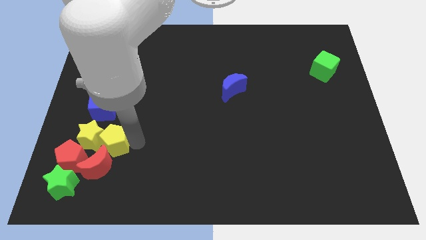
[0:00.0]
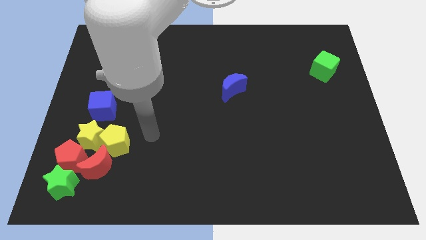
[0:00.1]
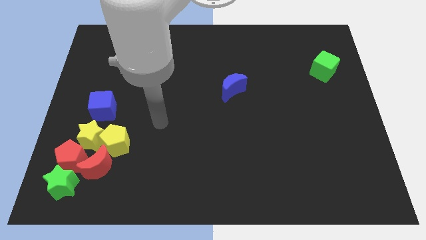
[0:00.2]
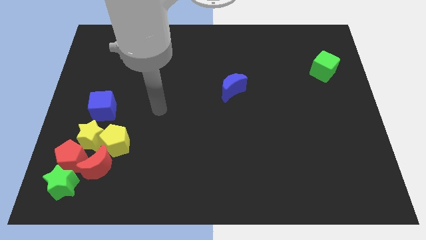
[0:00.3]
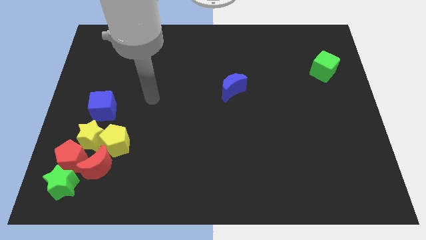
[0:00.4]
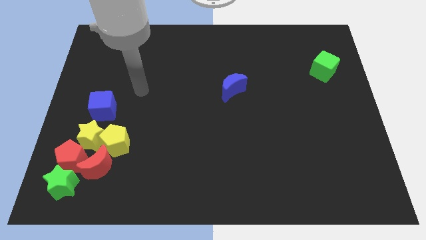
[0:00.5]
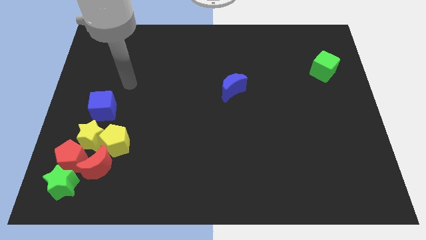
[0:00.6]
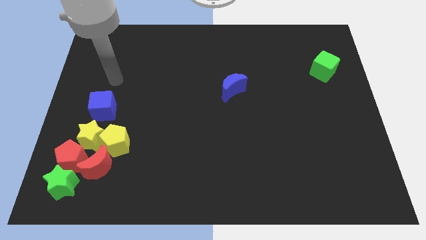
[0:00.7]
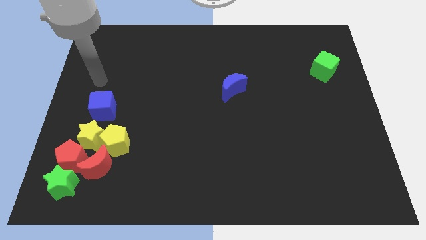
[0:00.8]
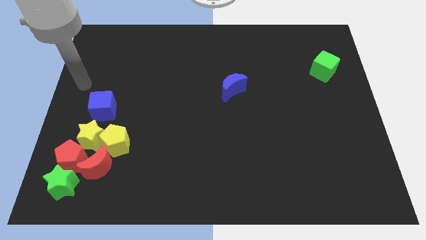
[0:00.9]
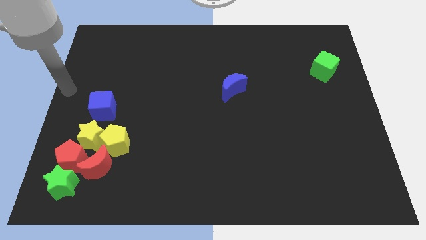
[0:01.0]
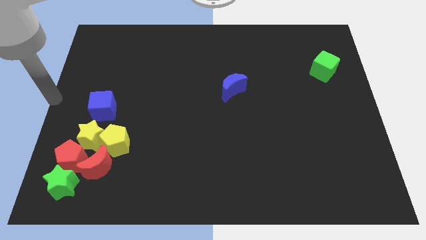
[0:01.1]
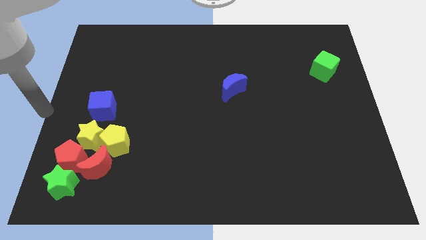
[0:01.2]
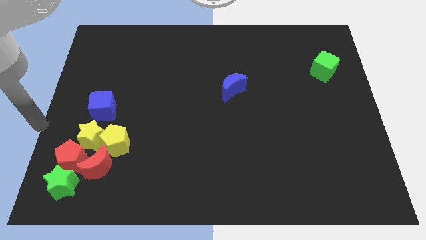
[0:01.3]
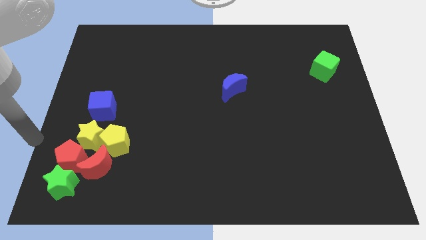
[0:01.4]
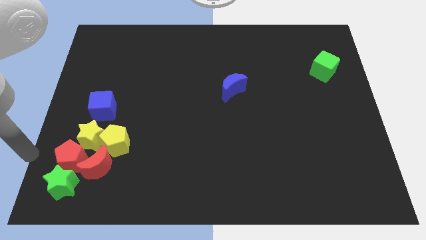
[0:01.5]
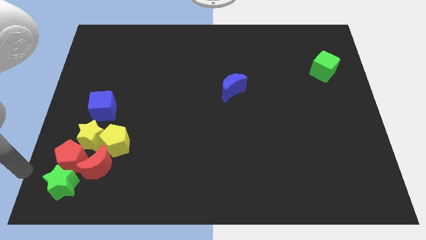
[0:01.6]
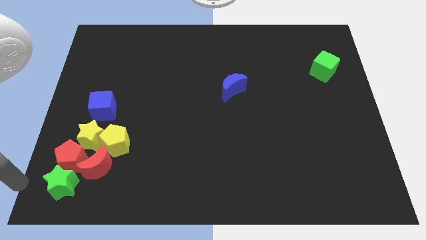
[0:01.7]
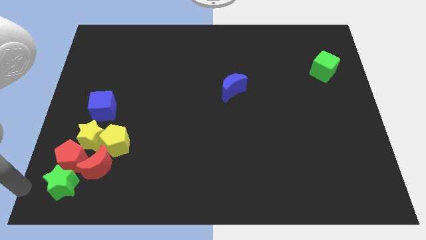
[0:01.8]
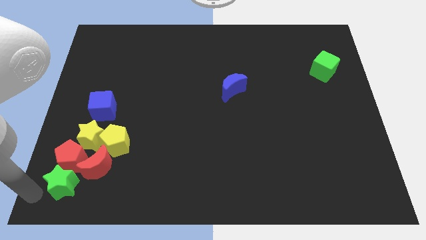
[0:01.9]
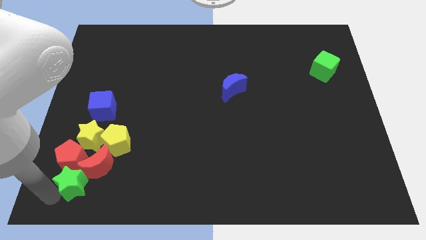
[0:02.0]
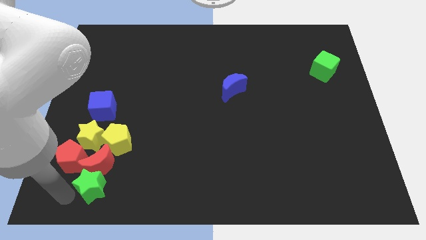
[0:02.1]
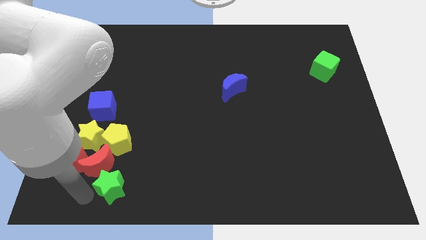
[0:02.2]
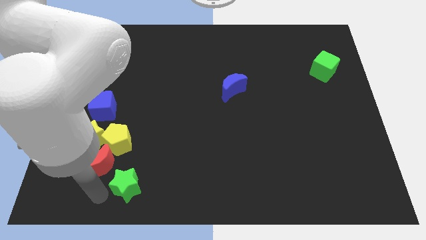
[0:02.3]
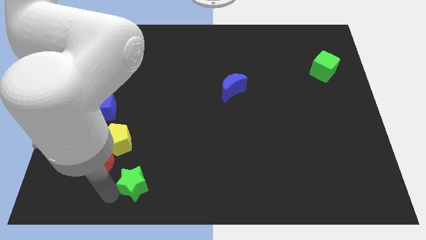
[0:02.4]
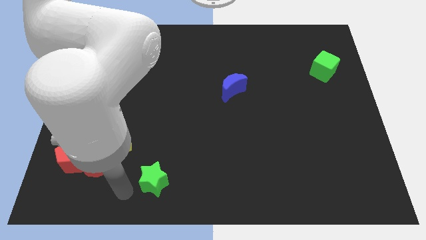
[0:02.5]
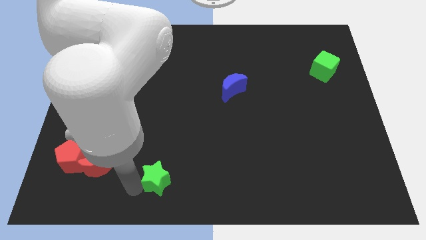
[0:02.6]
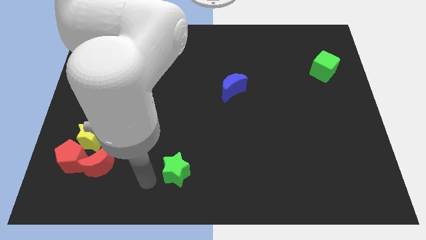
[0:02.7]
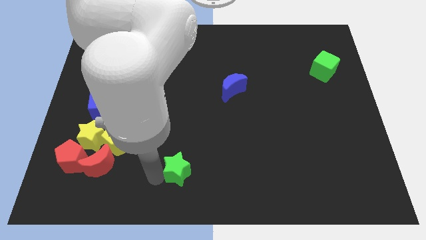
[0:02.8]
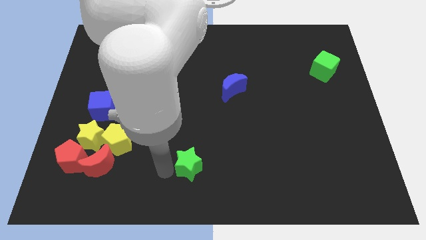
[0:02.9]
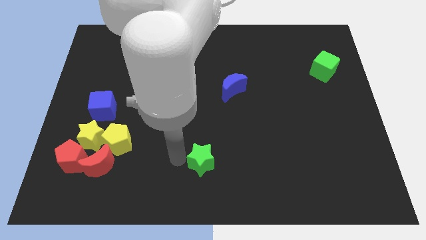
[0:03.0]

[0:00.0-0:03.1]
push the green star away from the red pentagon

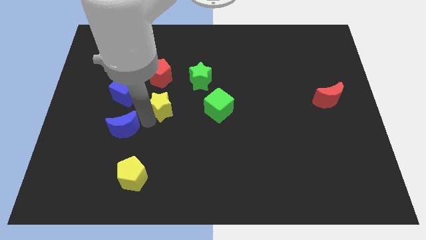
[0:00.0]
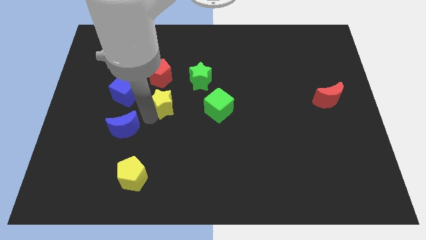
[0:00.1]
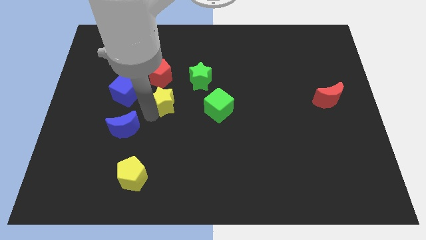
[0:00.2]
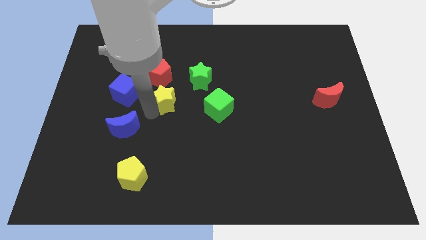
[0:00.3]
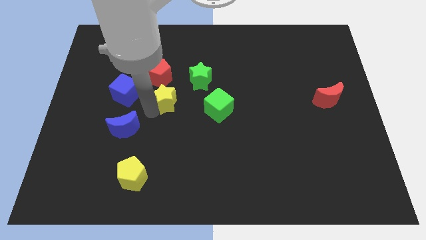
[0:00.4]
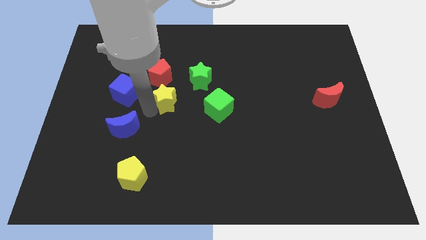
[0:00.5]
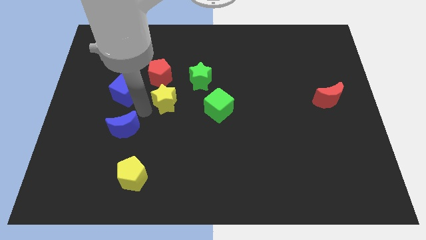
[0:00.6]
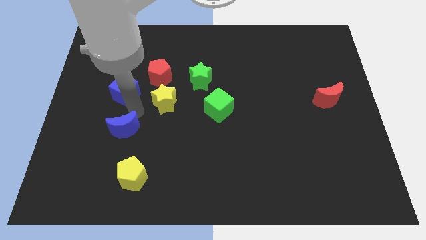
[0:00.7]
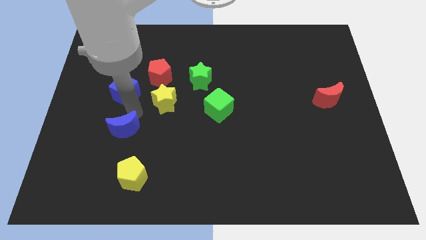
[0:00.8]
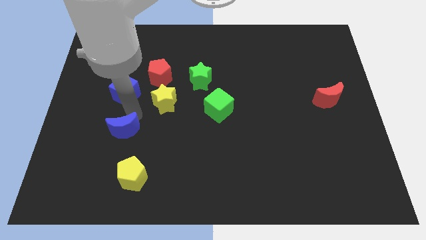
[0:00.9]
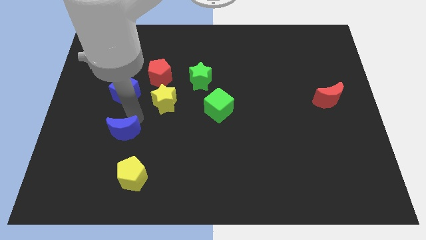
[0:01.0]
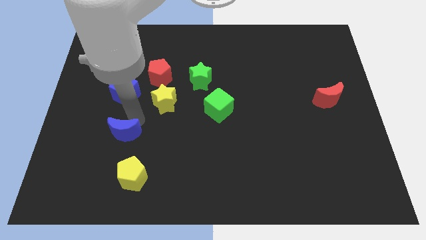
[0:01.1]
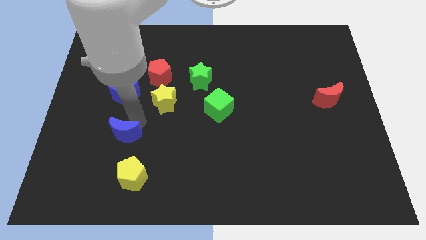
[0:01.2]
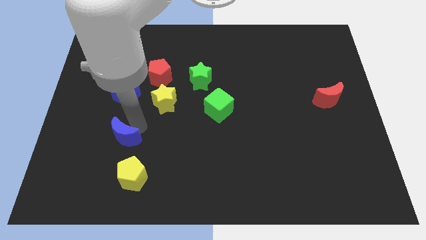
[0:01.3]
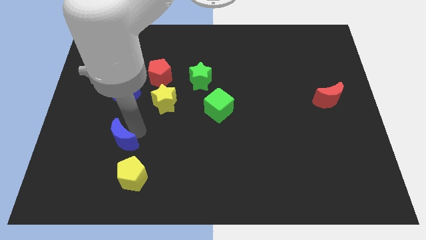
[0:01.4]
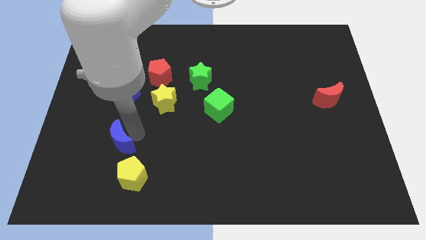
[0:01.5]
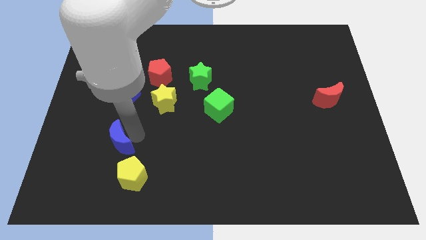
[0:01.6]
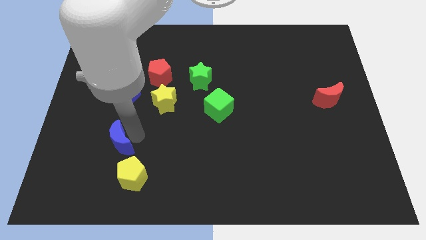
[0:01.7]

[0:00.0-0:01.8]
separate the yellow star and blue moon

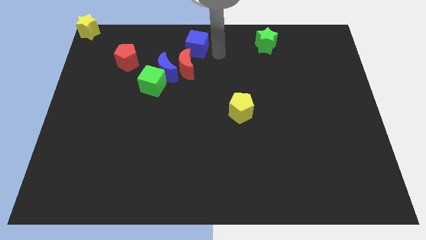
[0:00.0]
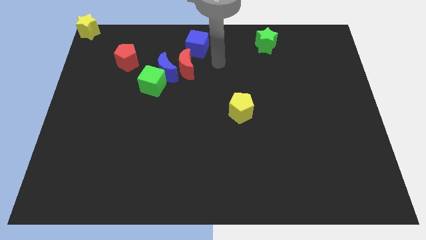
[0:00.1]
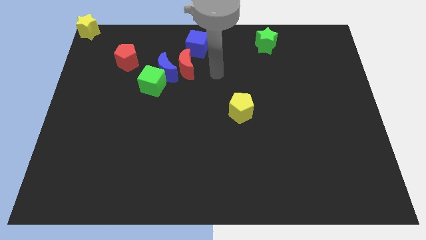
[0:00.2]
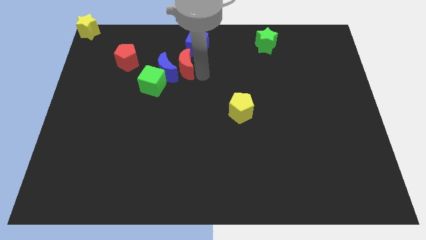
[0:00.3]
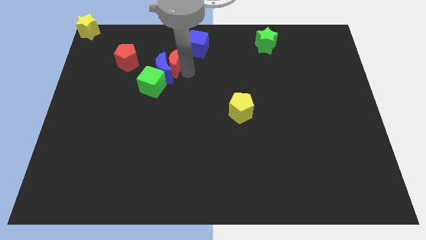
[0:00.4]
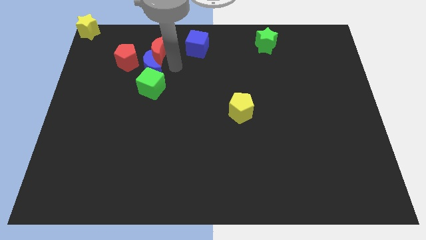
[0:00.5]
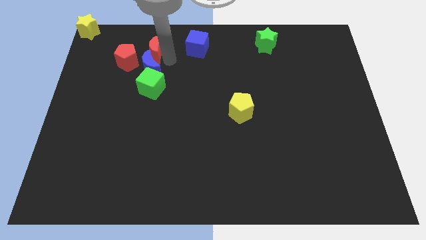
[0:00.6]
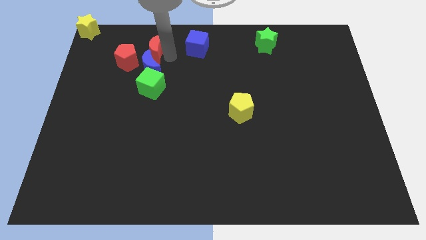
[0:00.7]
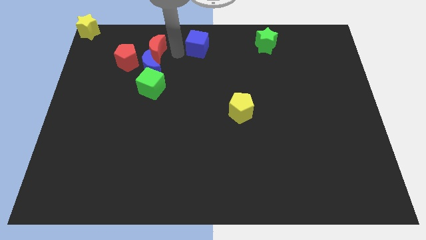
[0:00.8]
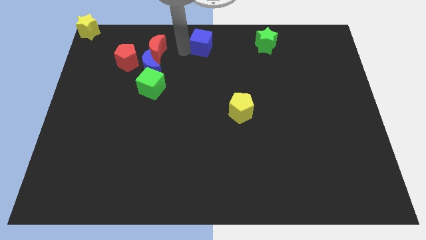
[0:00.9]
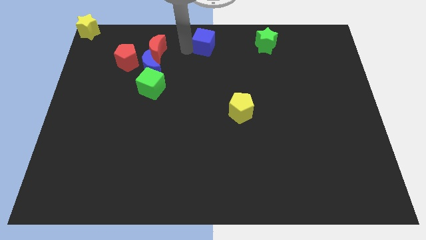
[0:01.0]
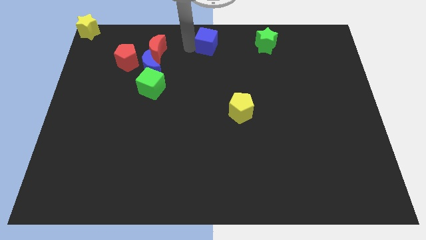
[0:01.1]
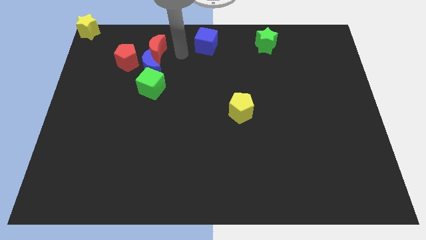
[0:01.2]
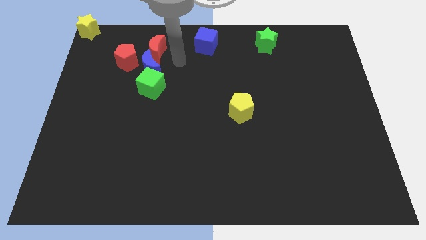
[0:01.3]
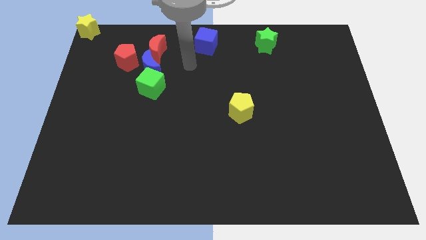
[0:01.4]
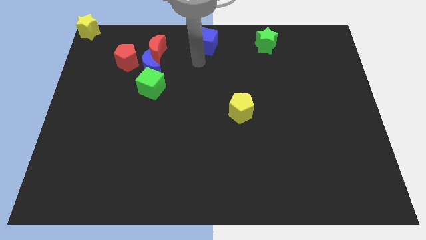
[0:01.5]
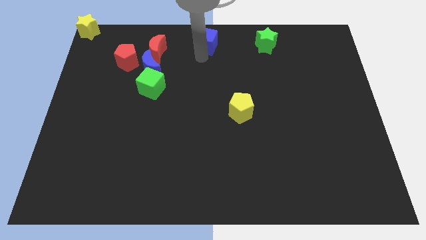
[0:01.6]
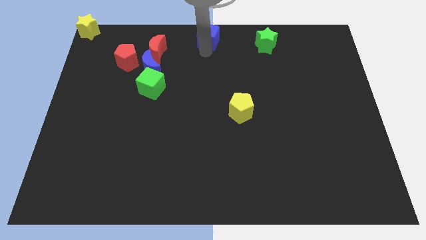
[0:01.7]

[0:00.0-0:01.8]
move the red moon into the blue moon

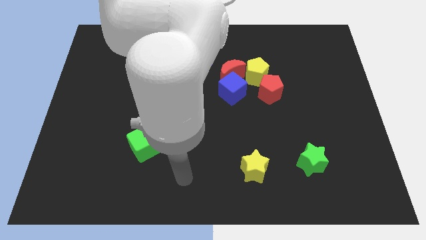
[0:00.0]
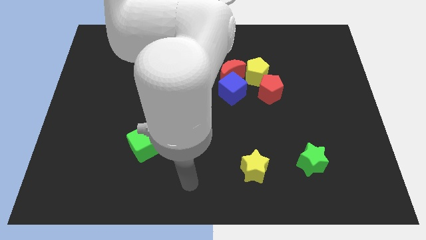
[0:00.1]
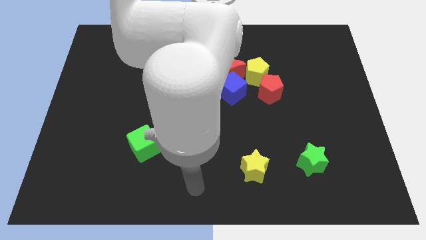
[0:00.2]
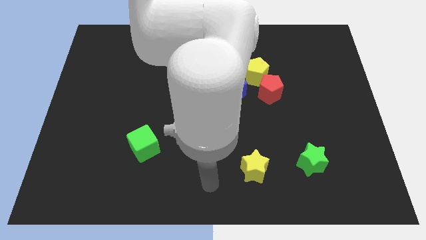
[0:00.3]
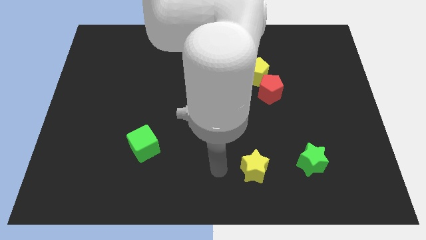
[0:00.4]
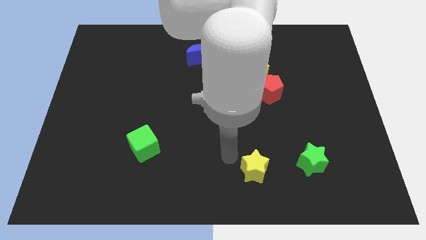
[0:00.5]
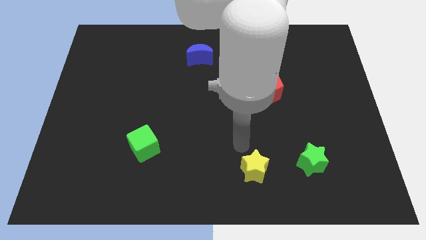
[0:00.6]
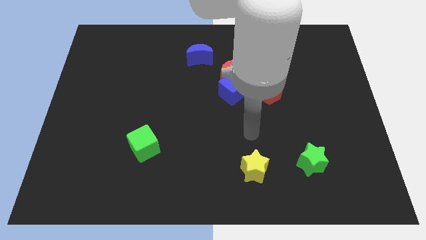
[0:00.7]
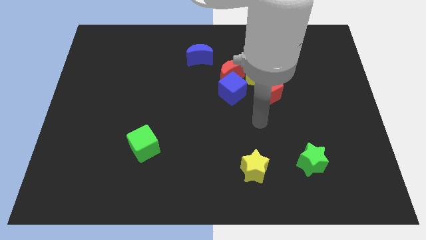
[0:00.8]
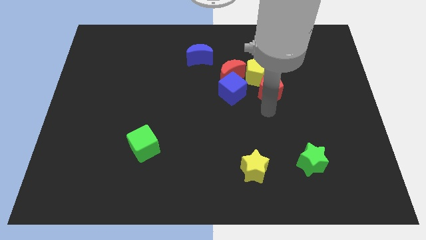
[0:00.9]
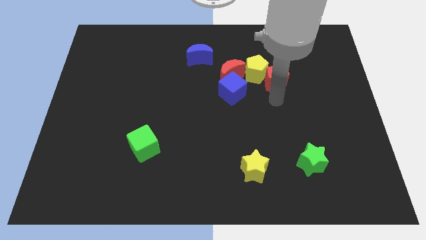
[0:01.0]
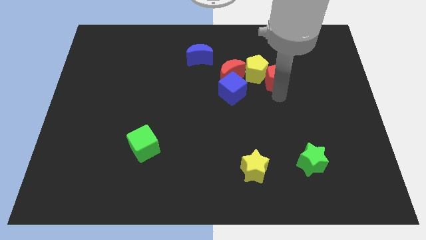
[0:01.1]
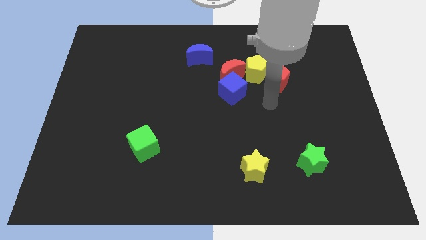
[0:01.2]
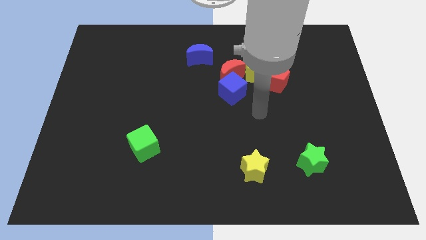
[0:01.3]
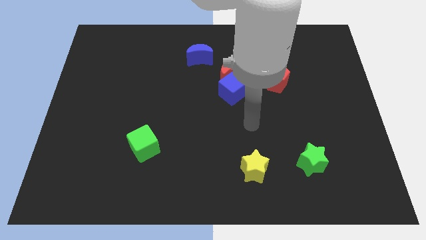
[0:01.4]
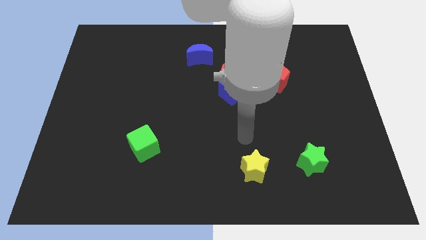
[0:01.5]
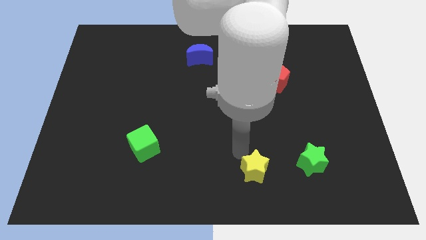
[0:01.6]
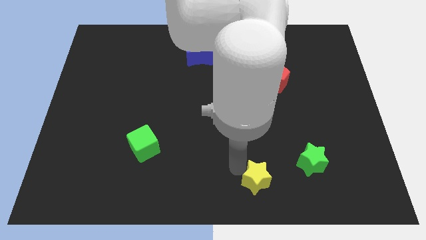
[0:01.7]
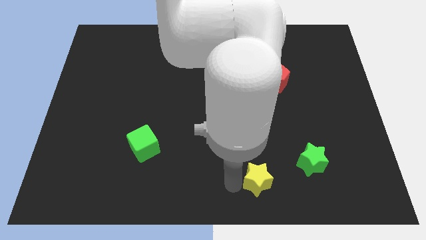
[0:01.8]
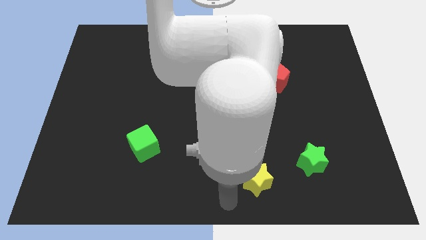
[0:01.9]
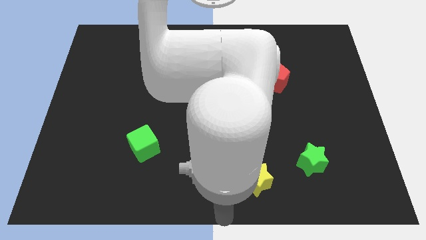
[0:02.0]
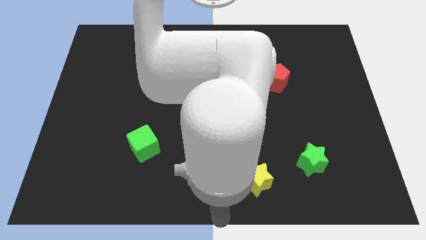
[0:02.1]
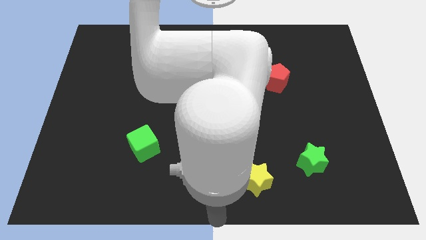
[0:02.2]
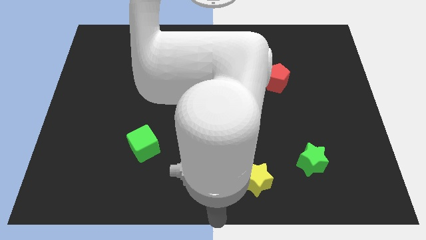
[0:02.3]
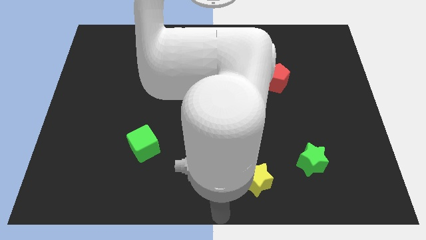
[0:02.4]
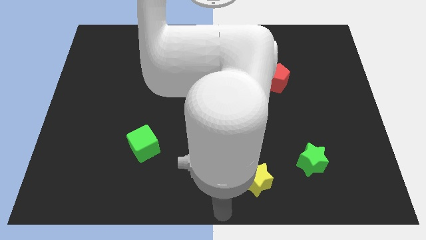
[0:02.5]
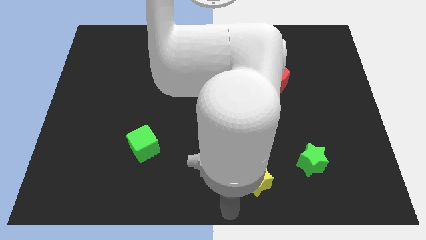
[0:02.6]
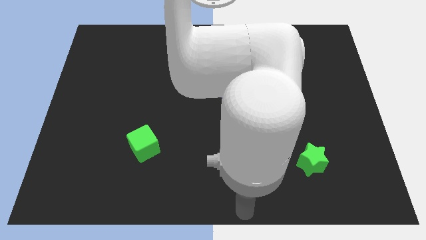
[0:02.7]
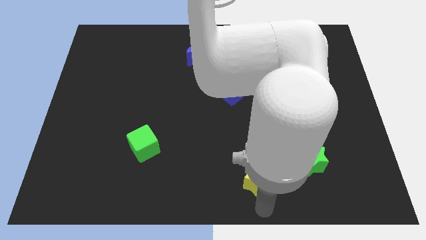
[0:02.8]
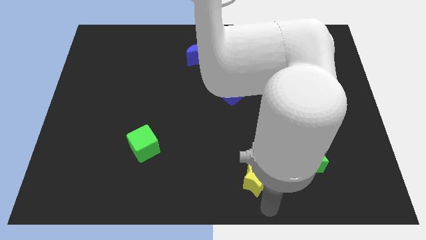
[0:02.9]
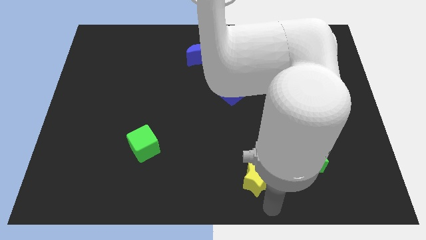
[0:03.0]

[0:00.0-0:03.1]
put your hand vertically below the yellow star
